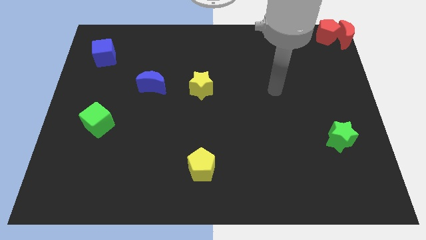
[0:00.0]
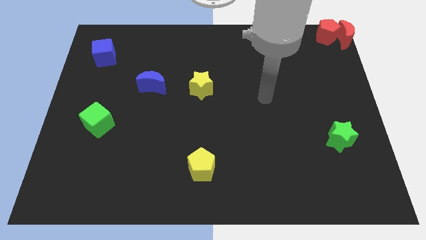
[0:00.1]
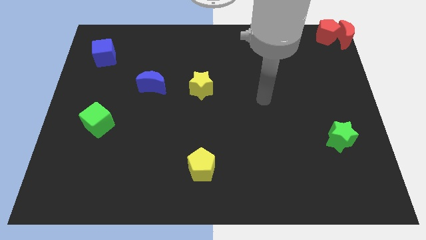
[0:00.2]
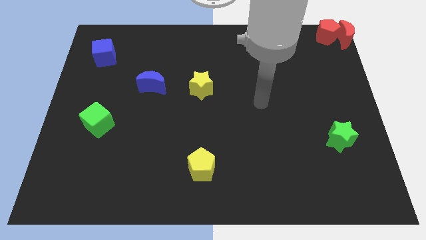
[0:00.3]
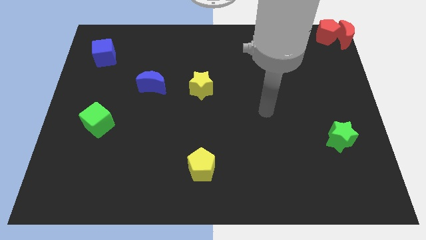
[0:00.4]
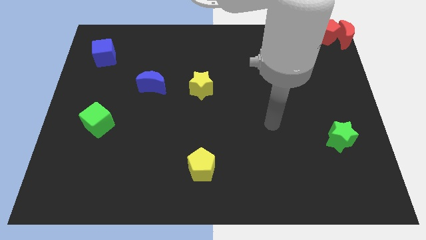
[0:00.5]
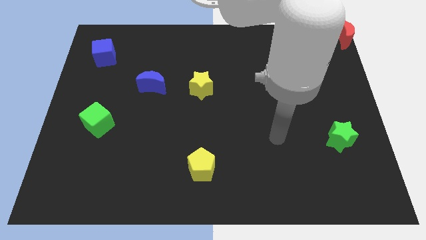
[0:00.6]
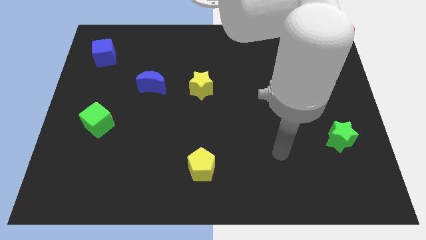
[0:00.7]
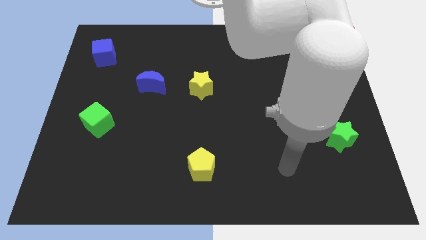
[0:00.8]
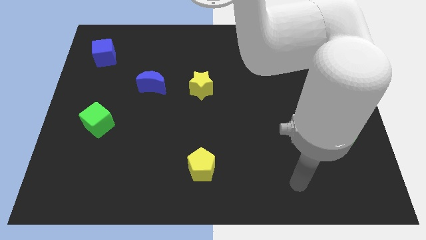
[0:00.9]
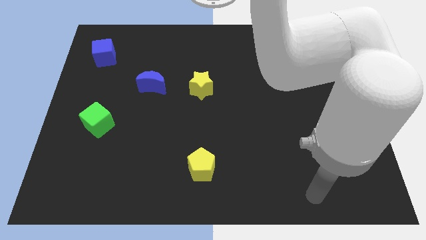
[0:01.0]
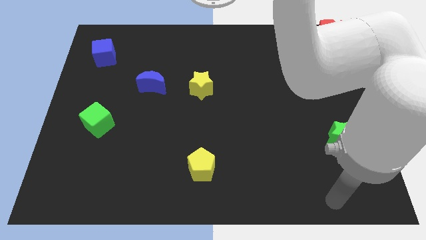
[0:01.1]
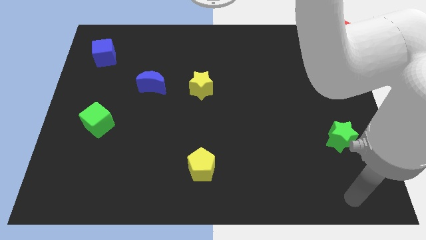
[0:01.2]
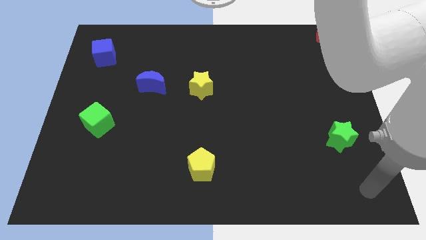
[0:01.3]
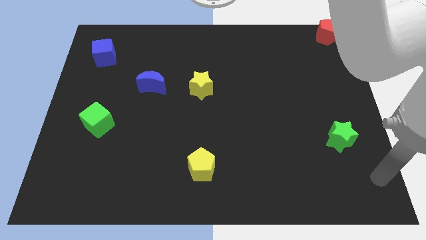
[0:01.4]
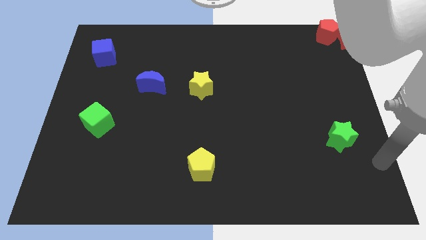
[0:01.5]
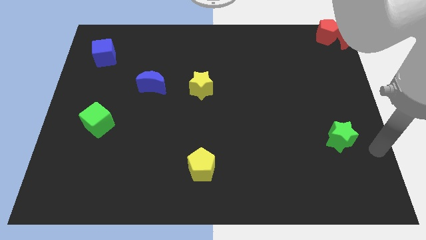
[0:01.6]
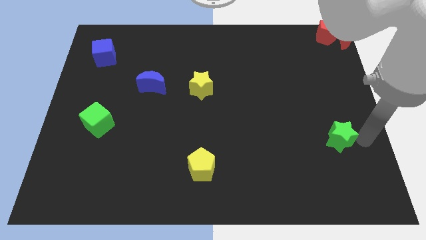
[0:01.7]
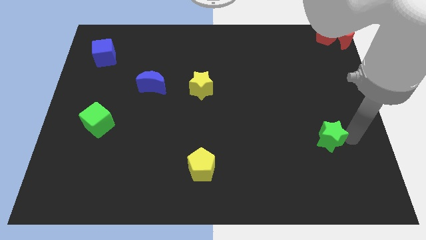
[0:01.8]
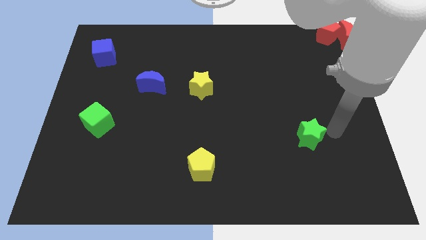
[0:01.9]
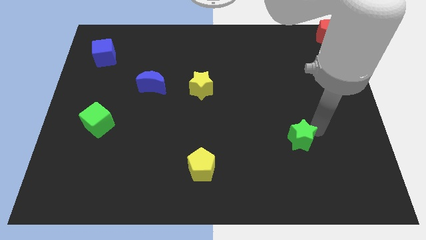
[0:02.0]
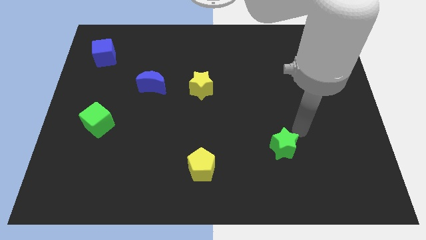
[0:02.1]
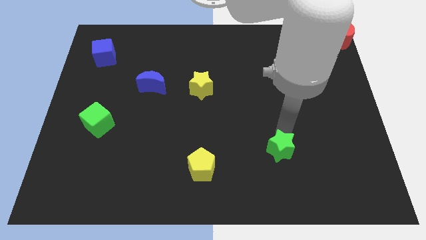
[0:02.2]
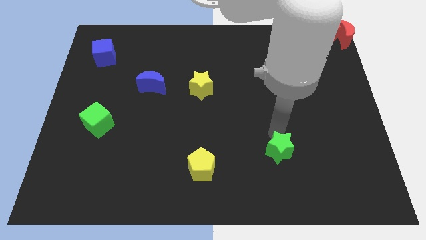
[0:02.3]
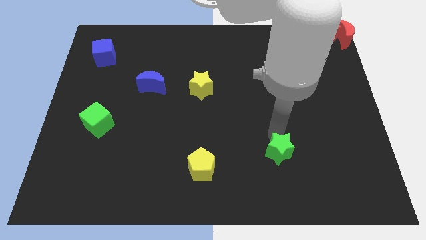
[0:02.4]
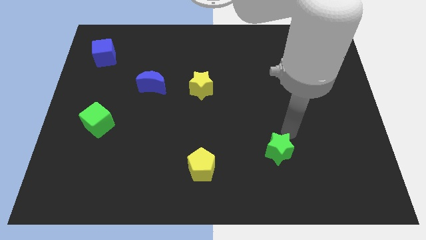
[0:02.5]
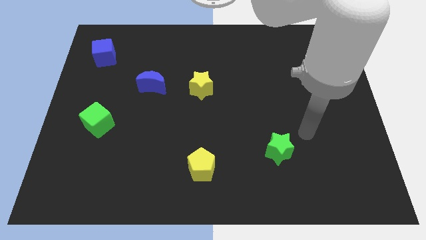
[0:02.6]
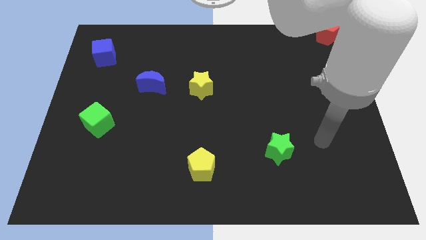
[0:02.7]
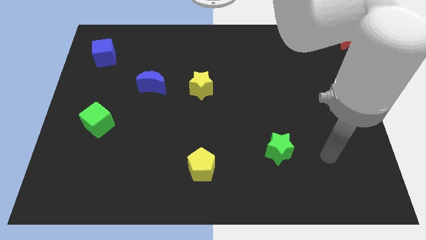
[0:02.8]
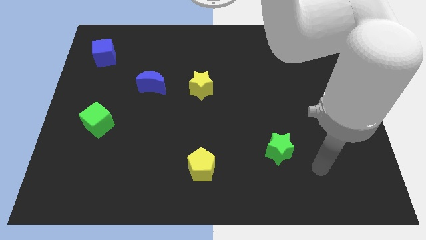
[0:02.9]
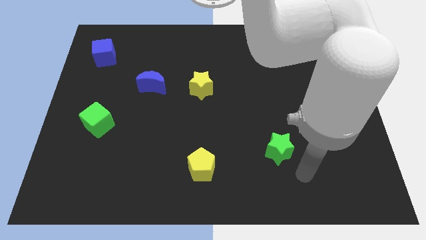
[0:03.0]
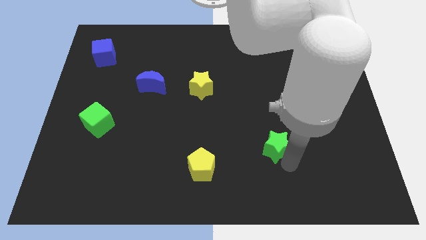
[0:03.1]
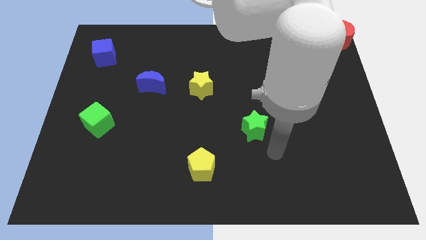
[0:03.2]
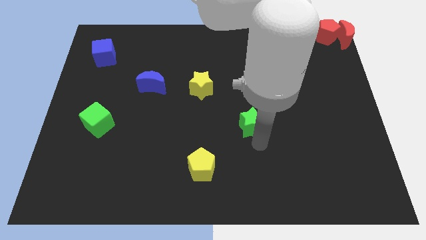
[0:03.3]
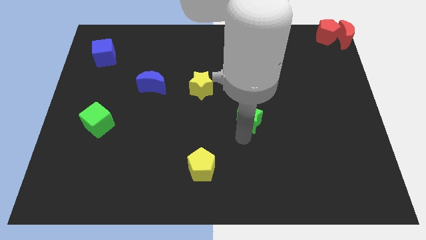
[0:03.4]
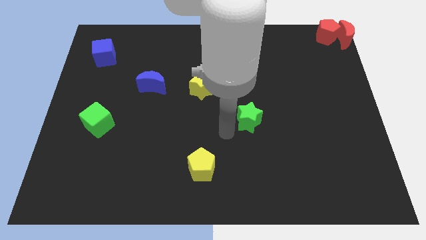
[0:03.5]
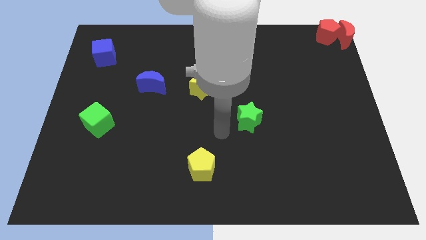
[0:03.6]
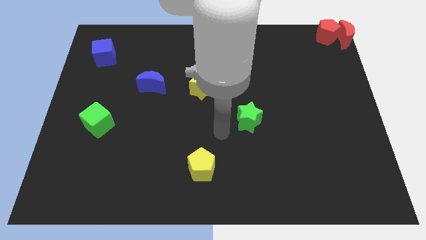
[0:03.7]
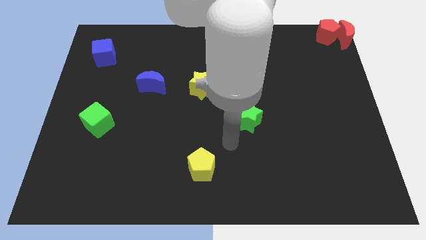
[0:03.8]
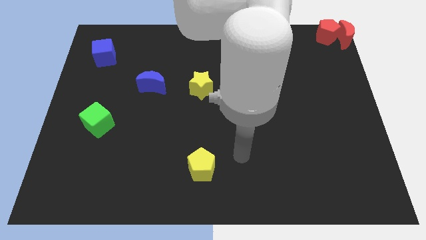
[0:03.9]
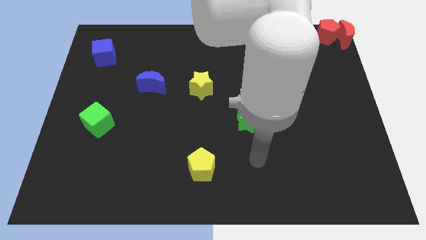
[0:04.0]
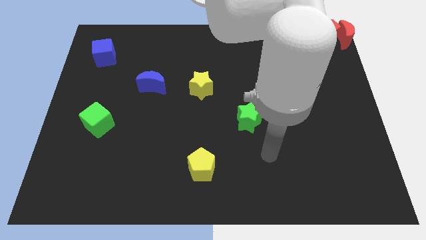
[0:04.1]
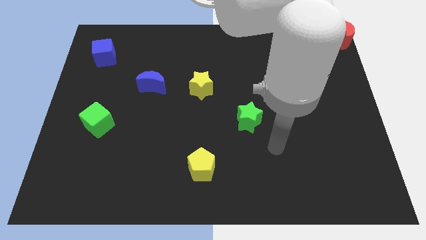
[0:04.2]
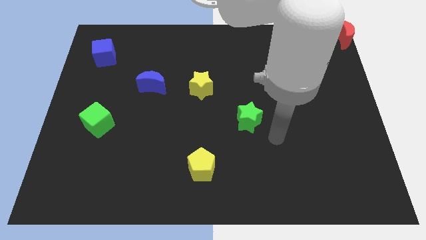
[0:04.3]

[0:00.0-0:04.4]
push the green star towards the yellow star

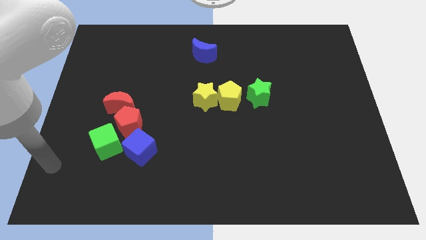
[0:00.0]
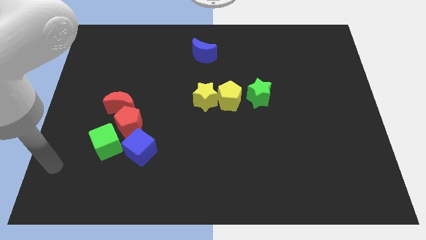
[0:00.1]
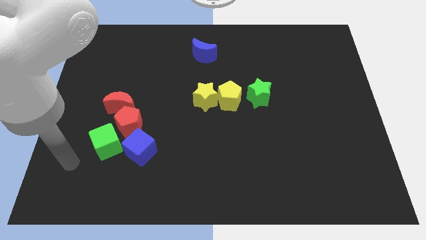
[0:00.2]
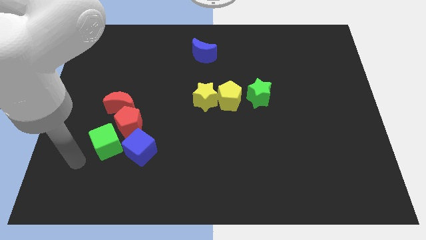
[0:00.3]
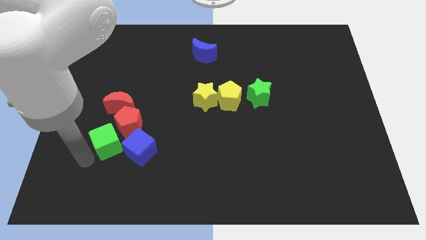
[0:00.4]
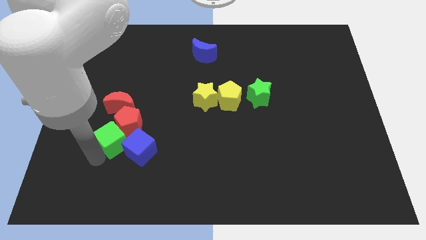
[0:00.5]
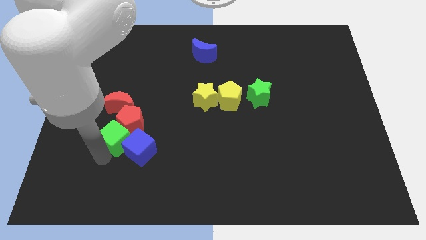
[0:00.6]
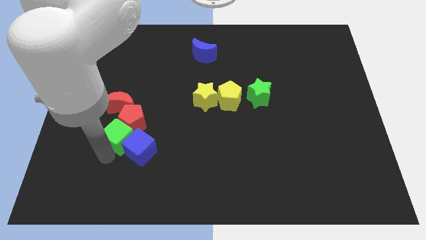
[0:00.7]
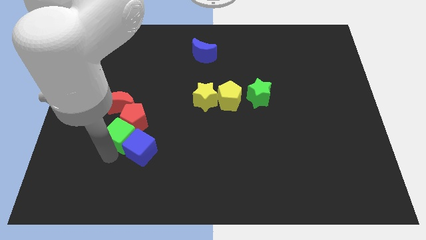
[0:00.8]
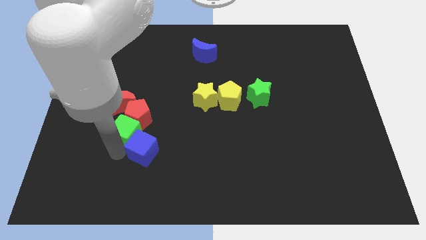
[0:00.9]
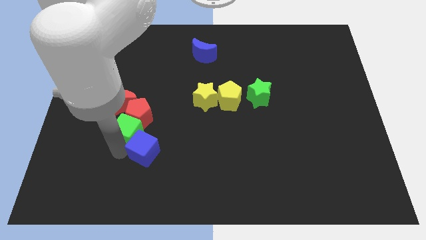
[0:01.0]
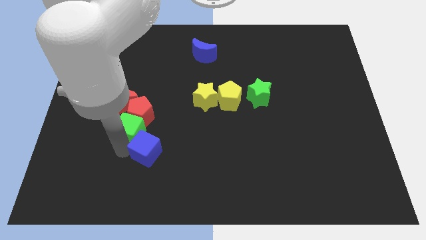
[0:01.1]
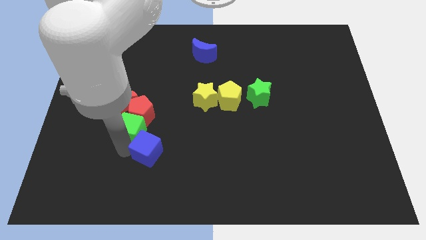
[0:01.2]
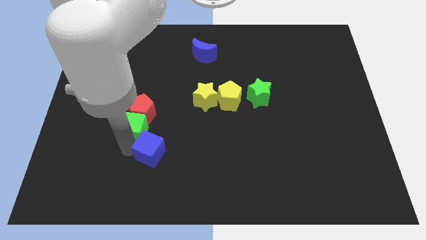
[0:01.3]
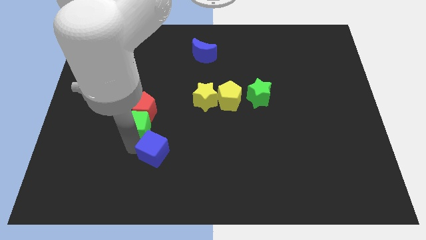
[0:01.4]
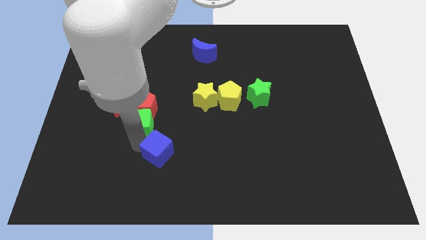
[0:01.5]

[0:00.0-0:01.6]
move a group of blocks to the center

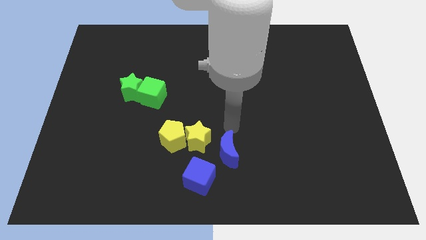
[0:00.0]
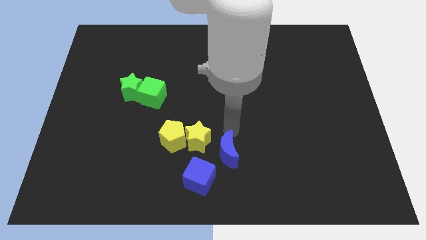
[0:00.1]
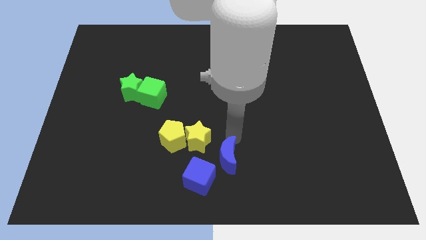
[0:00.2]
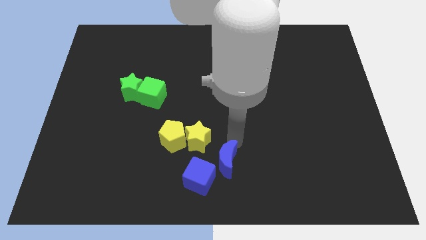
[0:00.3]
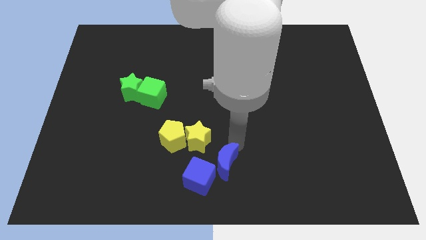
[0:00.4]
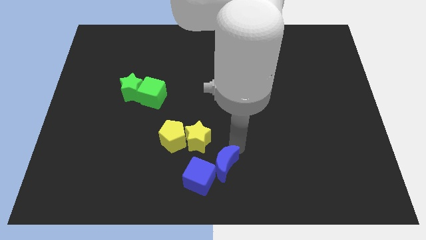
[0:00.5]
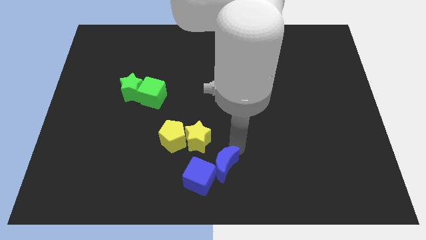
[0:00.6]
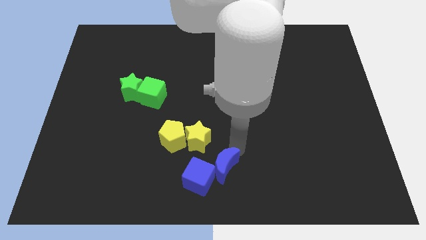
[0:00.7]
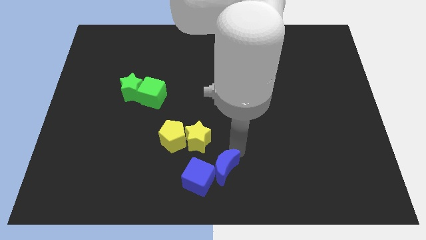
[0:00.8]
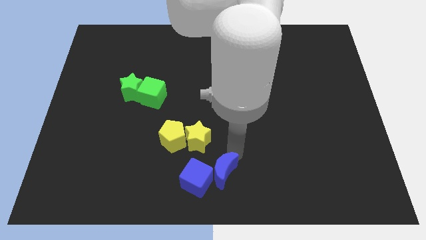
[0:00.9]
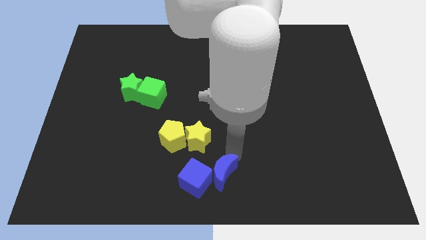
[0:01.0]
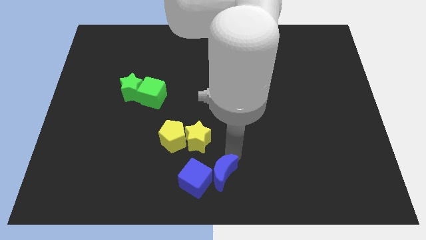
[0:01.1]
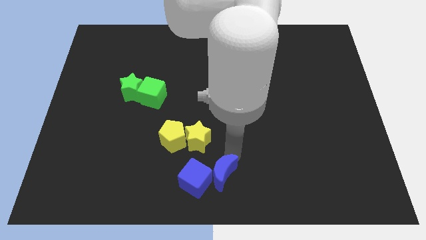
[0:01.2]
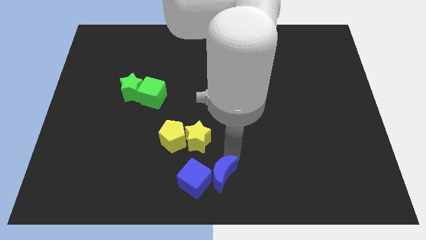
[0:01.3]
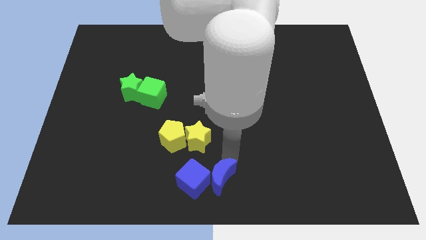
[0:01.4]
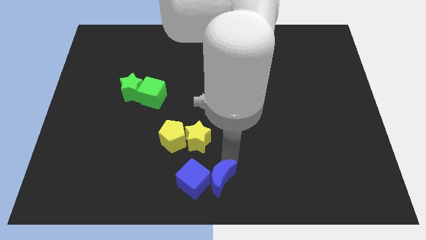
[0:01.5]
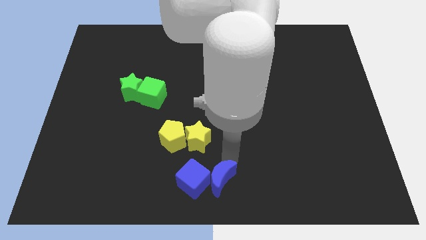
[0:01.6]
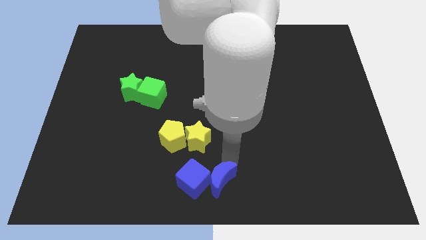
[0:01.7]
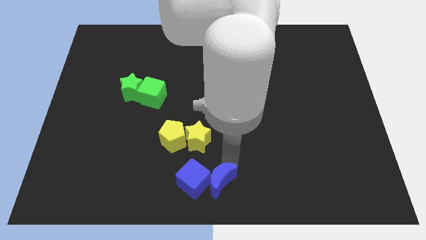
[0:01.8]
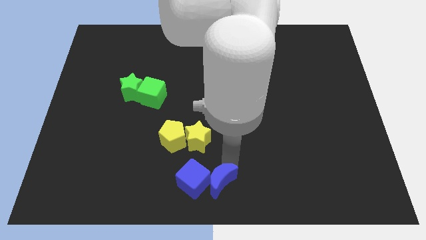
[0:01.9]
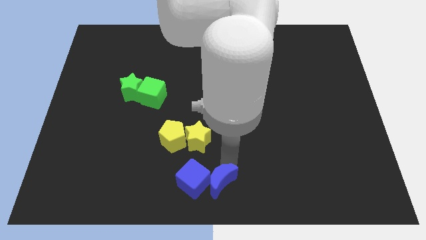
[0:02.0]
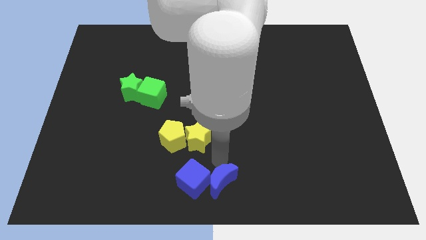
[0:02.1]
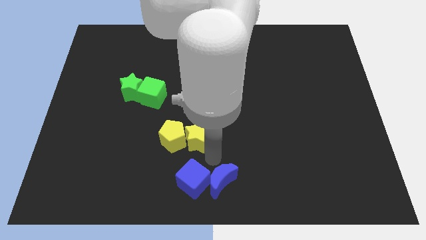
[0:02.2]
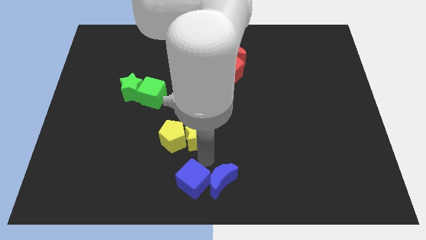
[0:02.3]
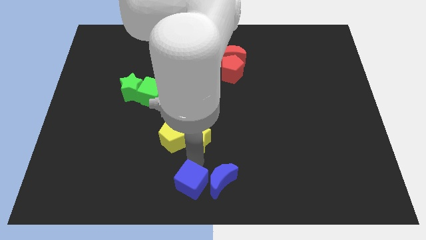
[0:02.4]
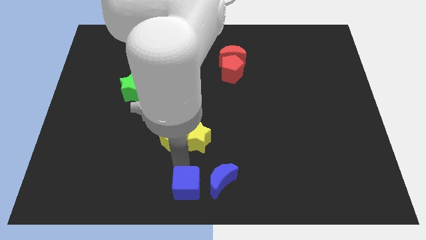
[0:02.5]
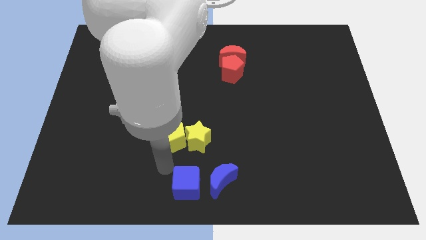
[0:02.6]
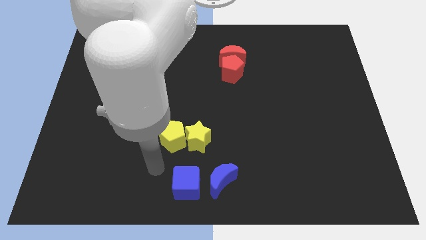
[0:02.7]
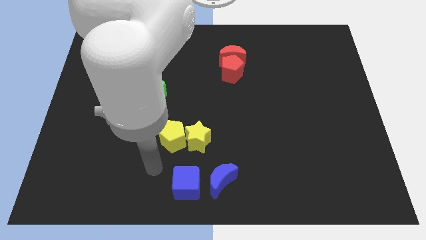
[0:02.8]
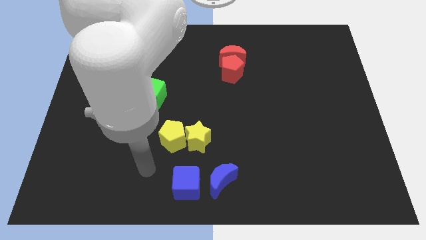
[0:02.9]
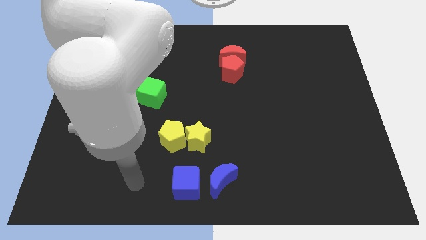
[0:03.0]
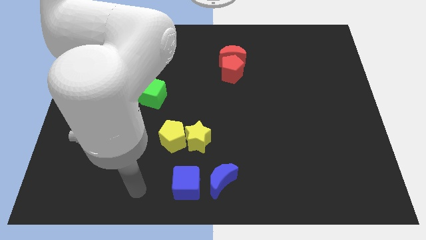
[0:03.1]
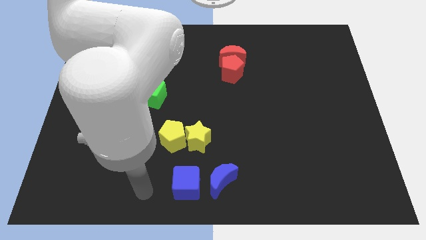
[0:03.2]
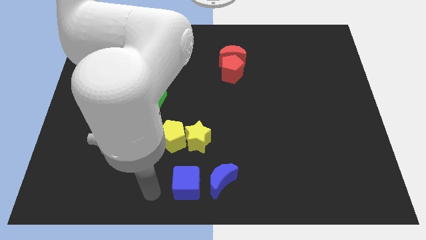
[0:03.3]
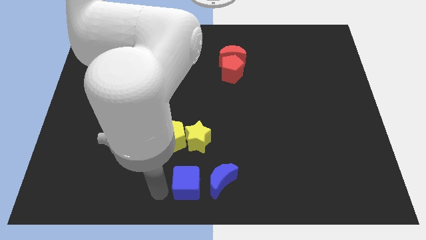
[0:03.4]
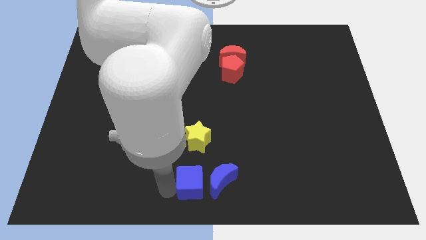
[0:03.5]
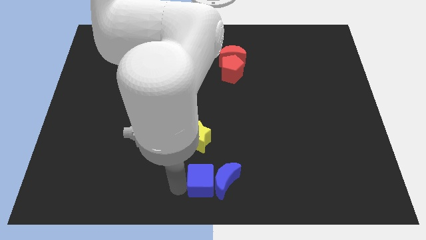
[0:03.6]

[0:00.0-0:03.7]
place both the blue blocks at the bottom center of the board
